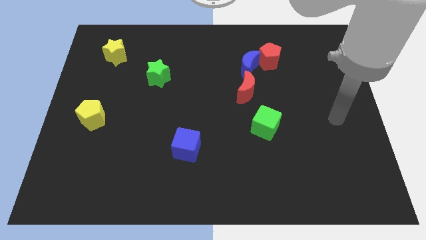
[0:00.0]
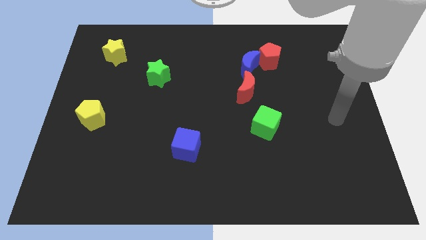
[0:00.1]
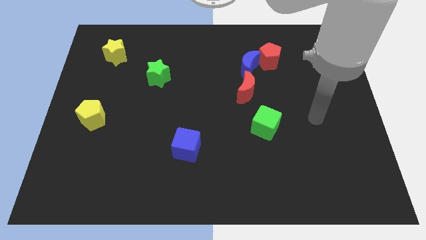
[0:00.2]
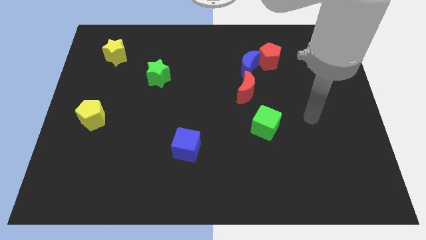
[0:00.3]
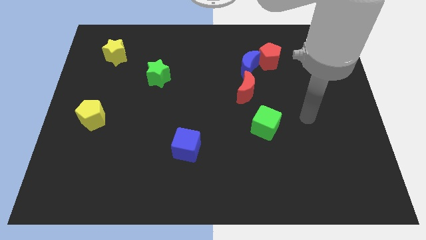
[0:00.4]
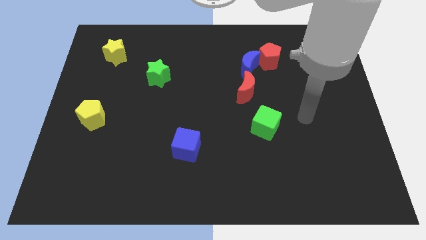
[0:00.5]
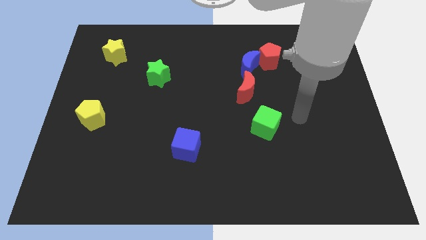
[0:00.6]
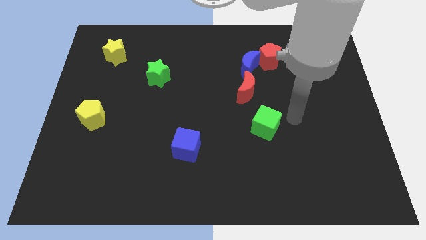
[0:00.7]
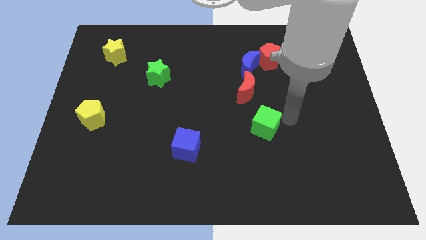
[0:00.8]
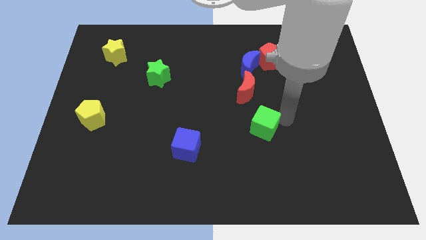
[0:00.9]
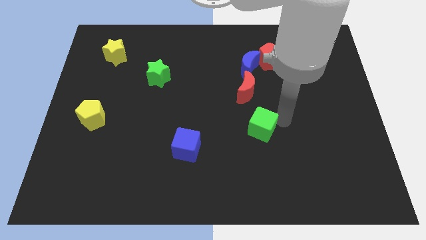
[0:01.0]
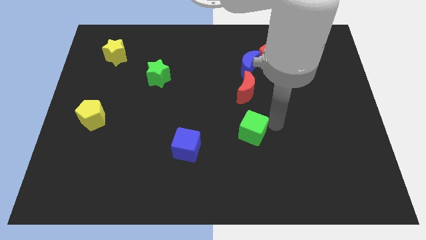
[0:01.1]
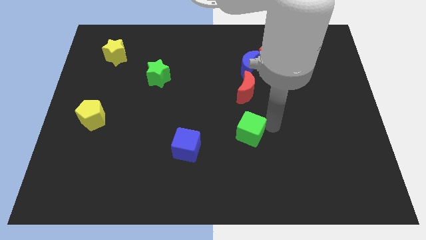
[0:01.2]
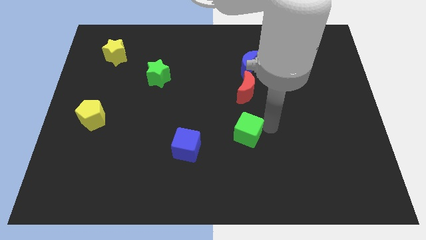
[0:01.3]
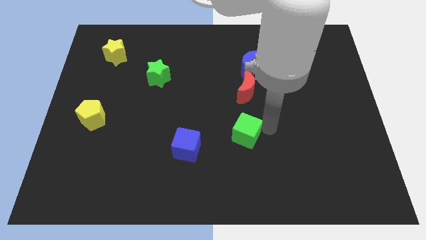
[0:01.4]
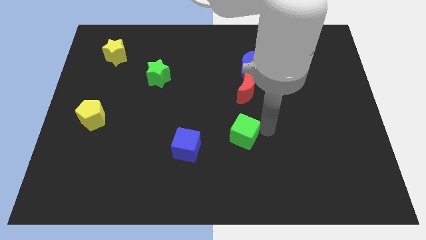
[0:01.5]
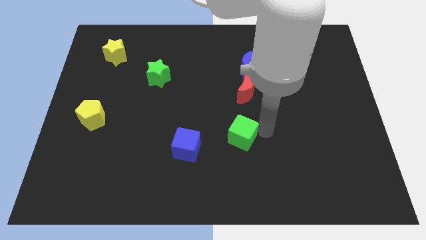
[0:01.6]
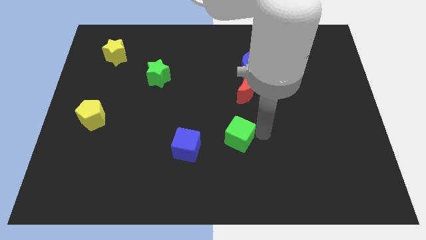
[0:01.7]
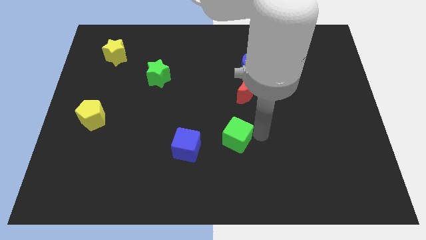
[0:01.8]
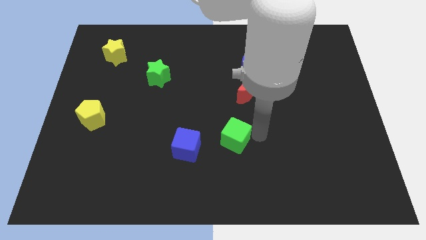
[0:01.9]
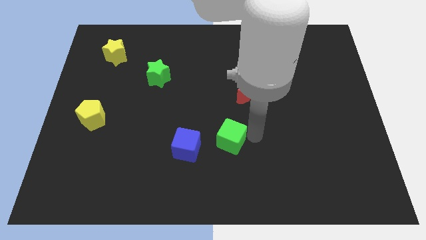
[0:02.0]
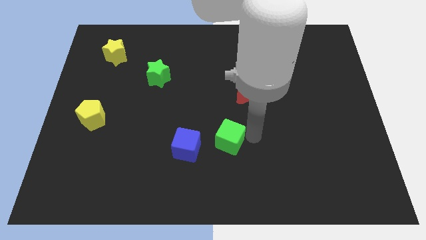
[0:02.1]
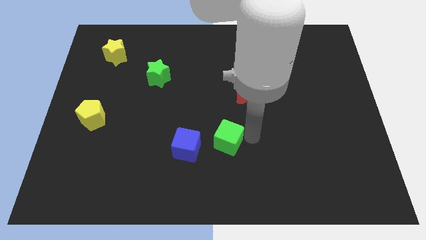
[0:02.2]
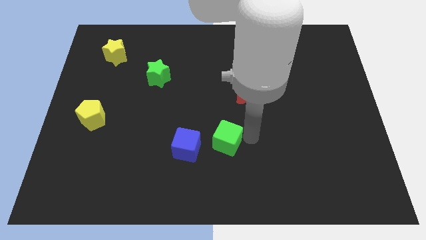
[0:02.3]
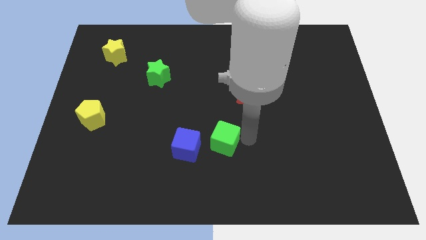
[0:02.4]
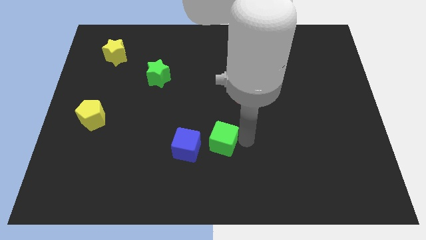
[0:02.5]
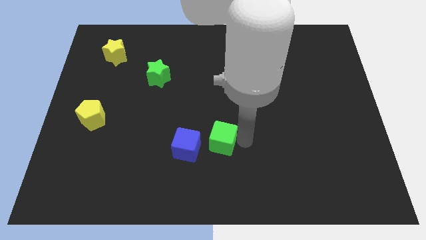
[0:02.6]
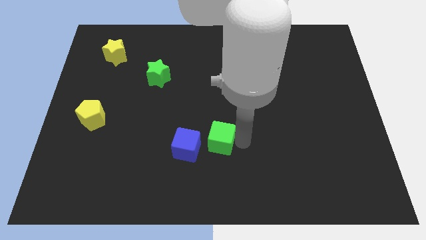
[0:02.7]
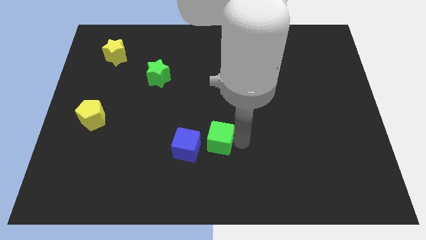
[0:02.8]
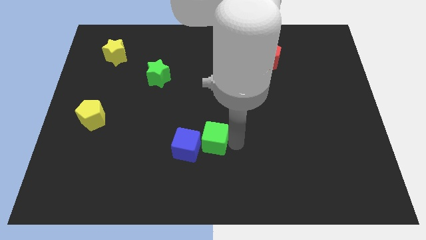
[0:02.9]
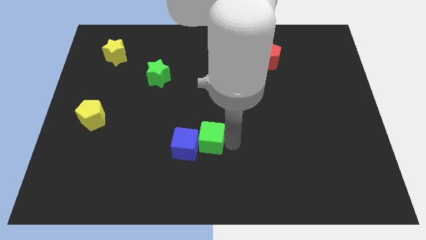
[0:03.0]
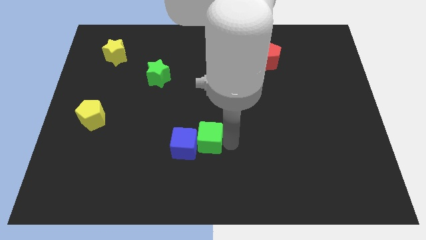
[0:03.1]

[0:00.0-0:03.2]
slide the green cube towards the blue cube

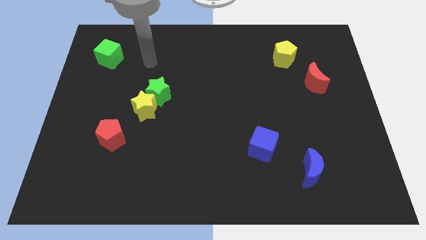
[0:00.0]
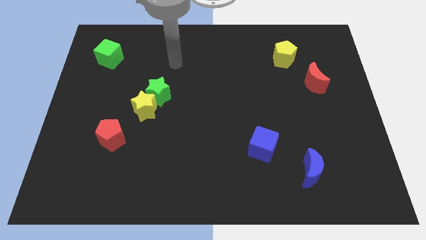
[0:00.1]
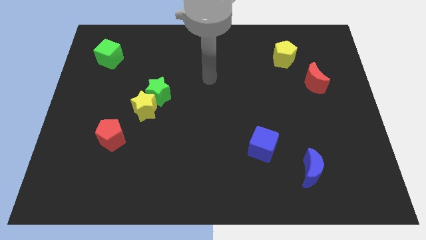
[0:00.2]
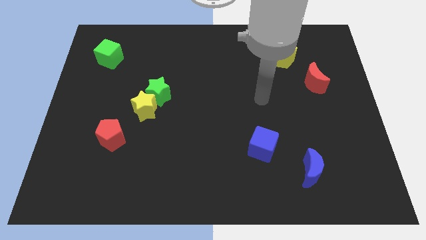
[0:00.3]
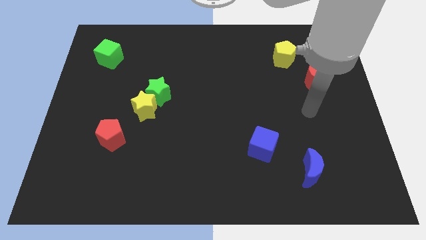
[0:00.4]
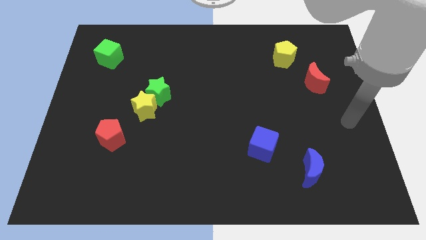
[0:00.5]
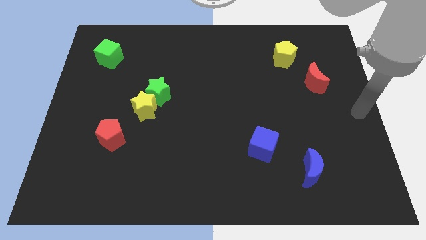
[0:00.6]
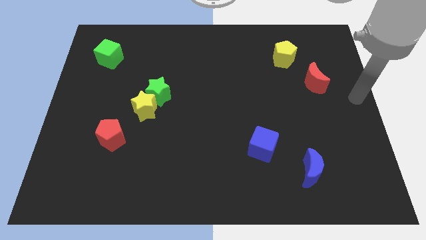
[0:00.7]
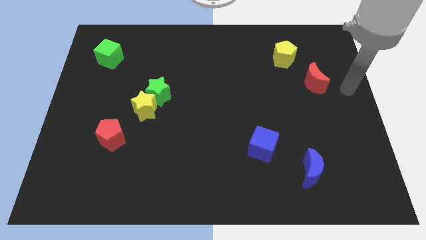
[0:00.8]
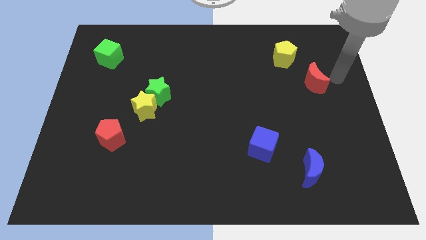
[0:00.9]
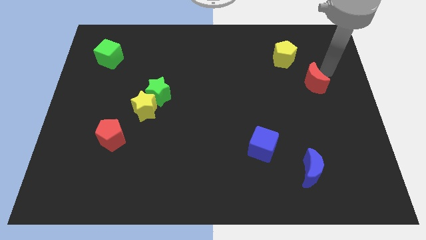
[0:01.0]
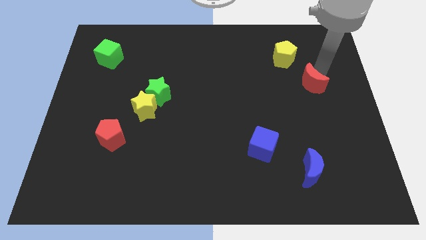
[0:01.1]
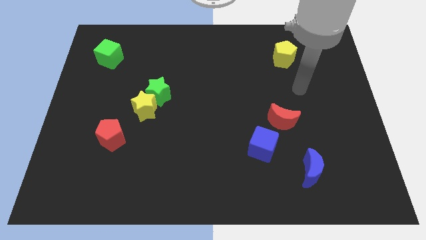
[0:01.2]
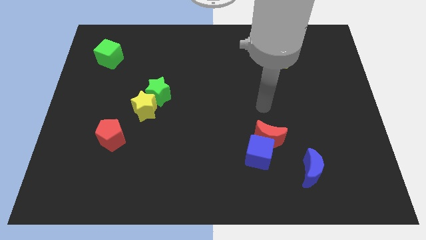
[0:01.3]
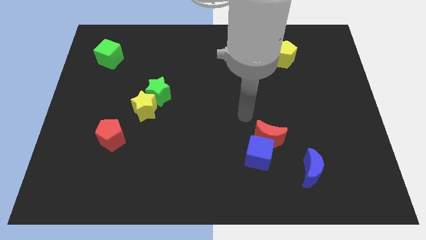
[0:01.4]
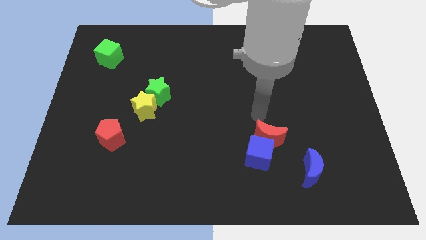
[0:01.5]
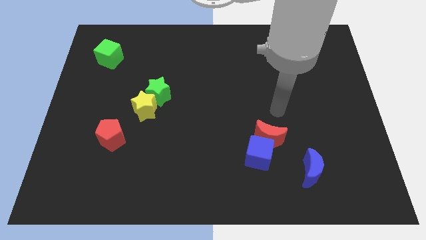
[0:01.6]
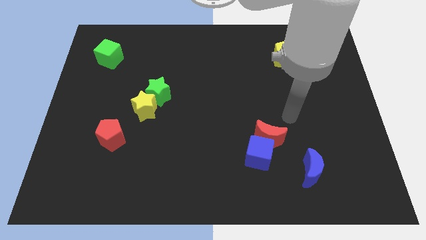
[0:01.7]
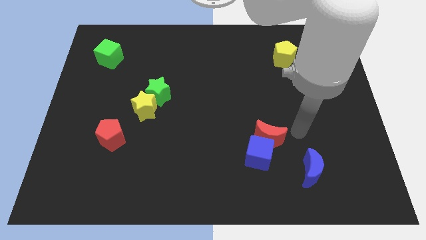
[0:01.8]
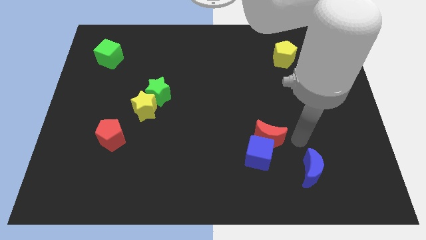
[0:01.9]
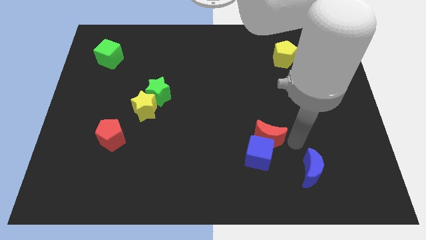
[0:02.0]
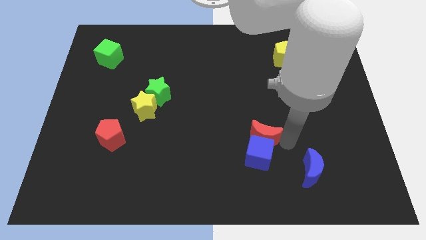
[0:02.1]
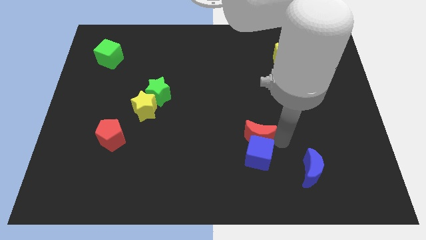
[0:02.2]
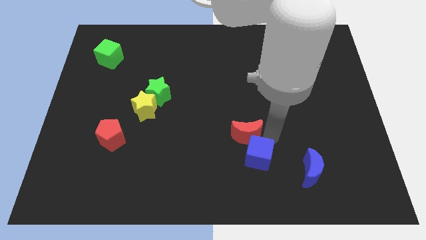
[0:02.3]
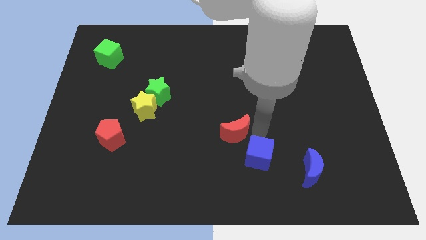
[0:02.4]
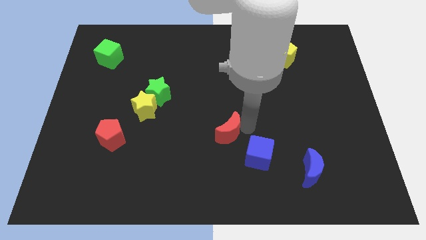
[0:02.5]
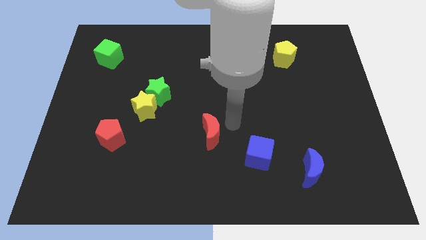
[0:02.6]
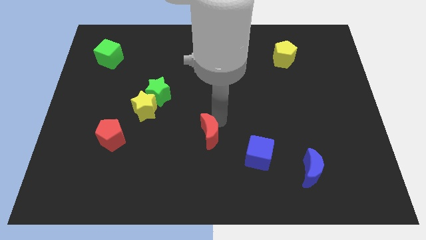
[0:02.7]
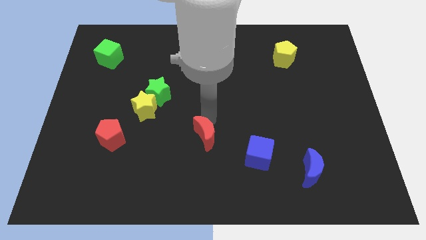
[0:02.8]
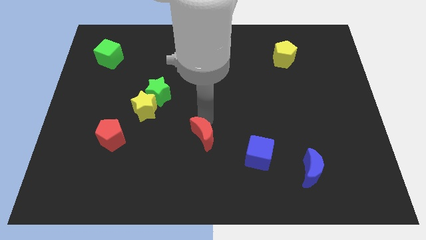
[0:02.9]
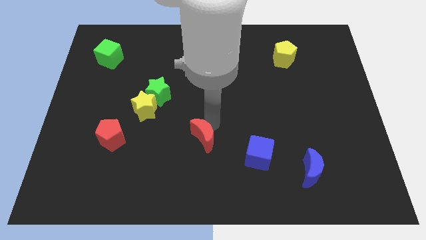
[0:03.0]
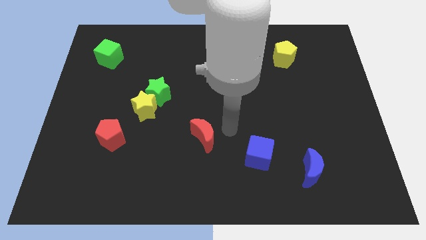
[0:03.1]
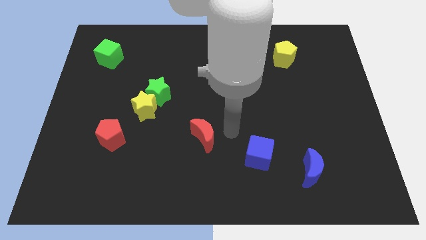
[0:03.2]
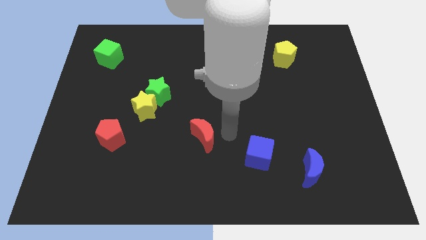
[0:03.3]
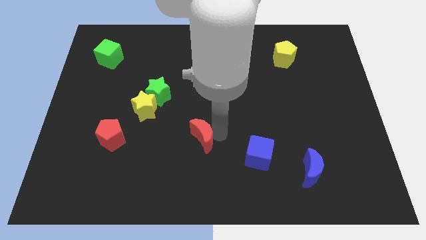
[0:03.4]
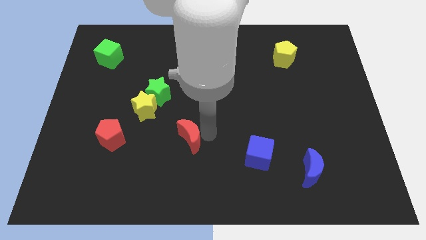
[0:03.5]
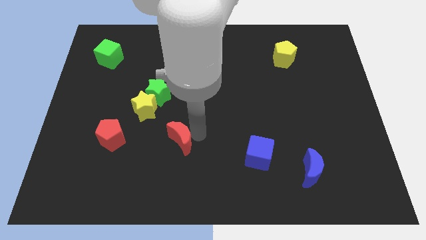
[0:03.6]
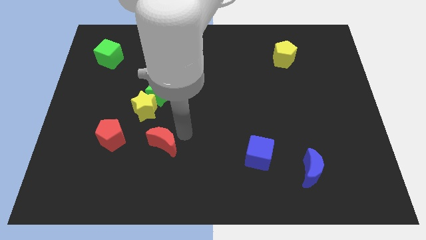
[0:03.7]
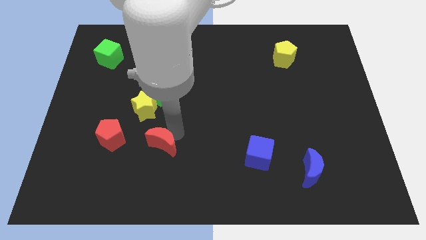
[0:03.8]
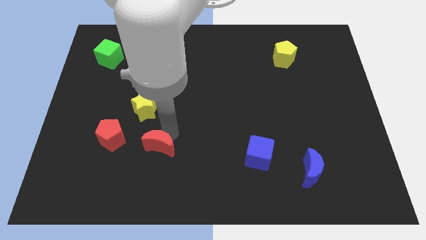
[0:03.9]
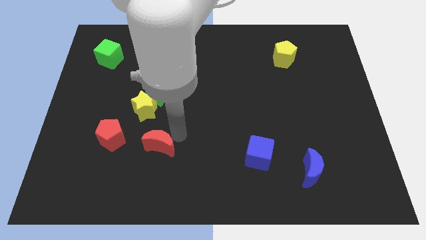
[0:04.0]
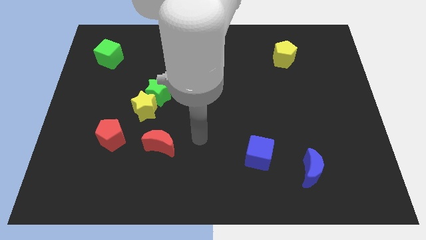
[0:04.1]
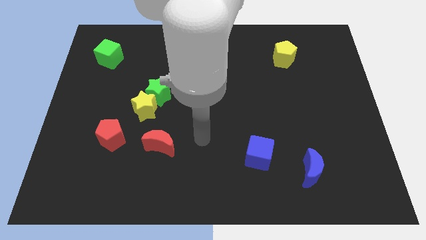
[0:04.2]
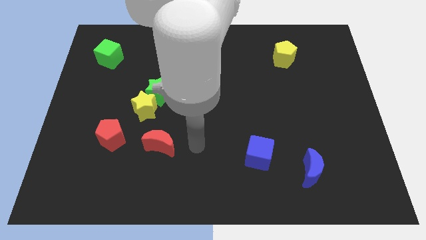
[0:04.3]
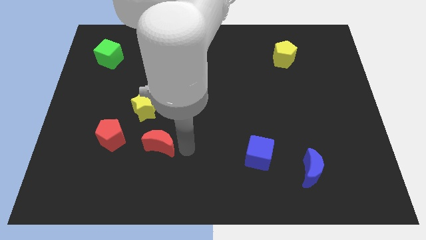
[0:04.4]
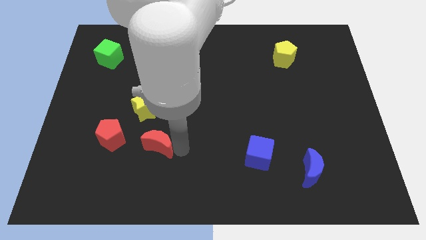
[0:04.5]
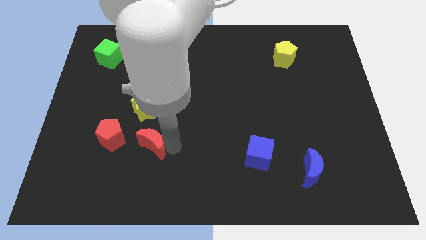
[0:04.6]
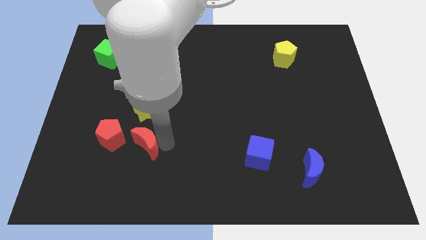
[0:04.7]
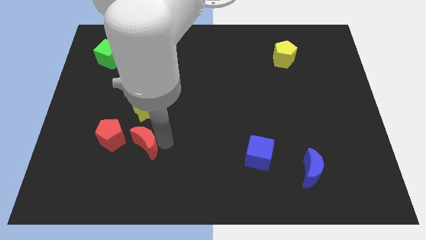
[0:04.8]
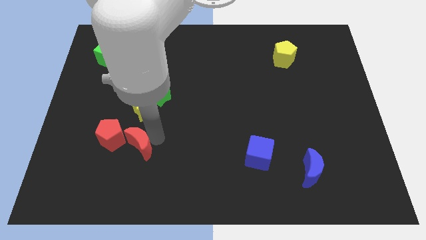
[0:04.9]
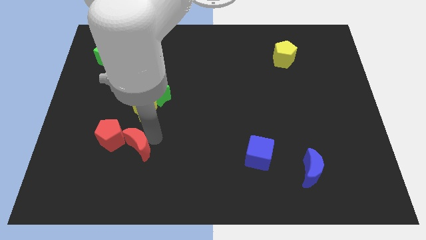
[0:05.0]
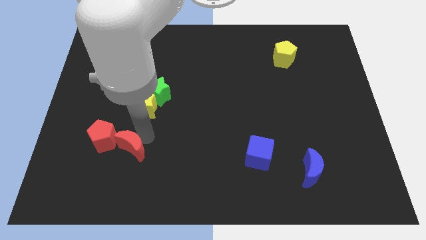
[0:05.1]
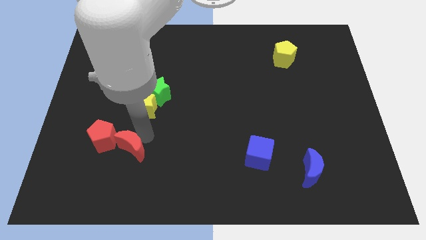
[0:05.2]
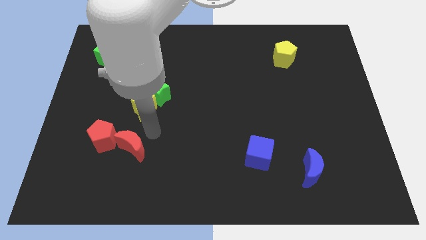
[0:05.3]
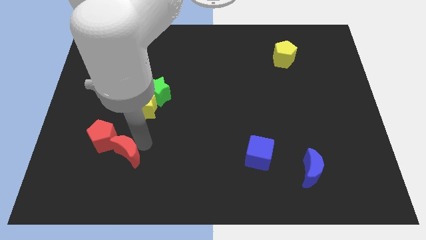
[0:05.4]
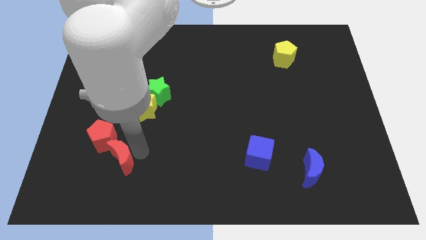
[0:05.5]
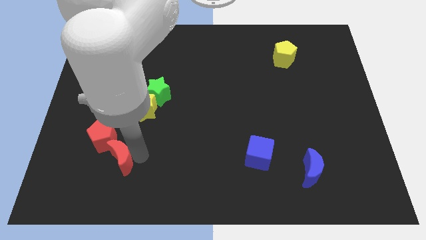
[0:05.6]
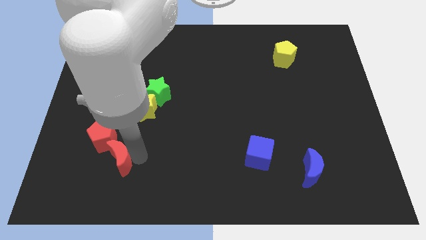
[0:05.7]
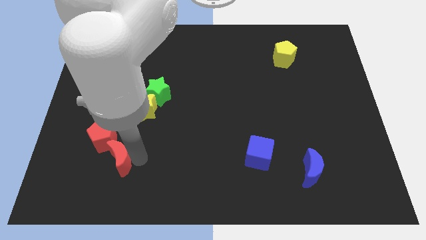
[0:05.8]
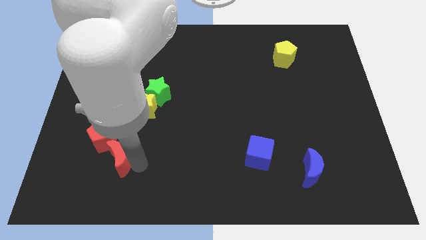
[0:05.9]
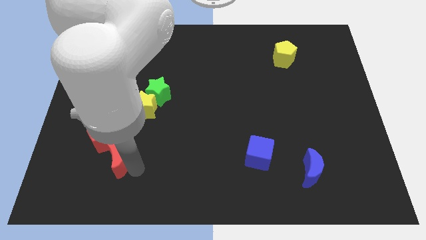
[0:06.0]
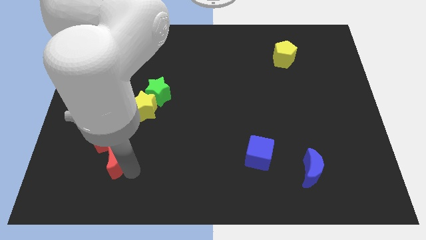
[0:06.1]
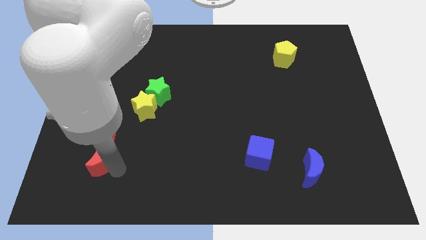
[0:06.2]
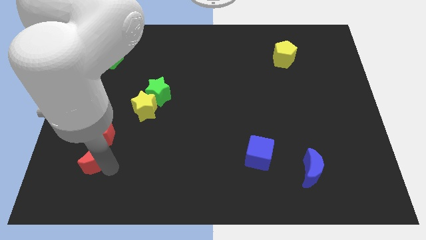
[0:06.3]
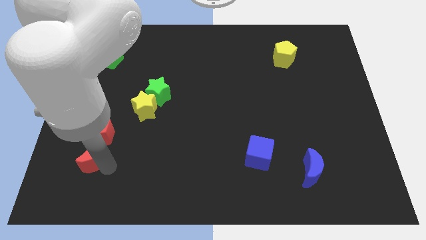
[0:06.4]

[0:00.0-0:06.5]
put the red moon towards the red pentagon
